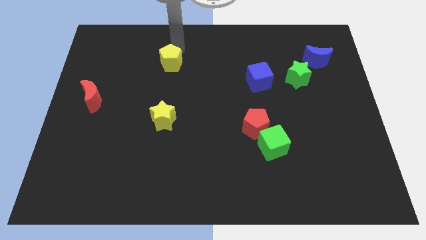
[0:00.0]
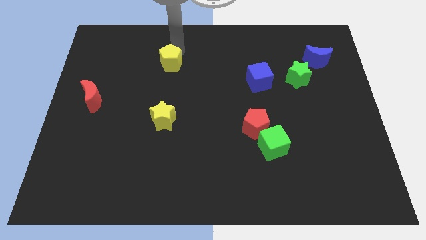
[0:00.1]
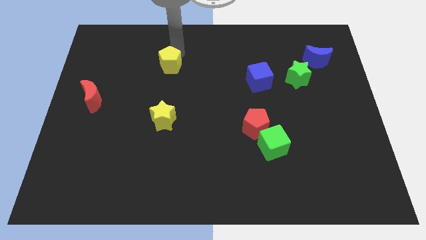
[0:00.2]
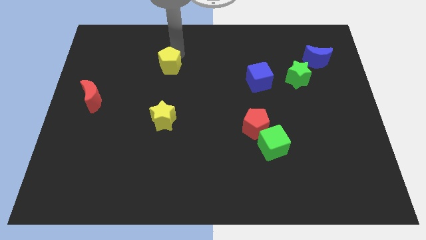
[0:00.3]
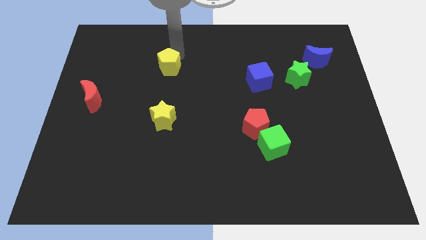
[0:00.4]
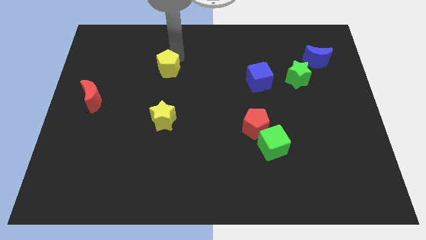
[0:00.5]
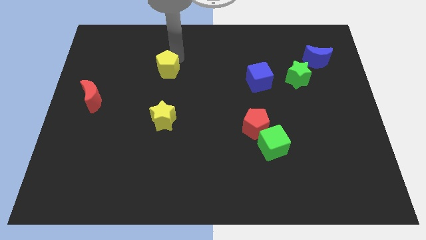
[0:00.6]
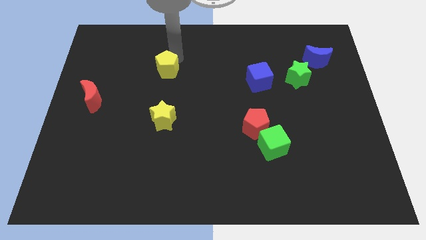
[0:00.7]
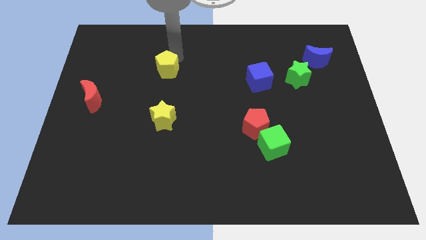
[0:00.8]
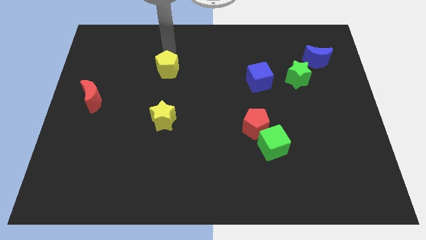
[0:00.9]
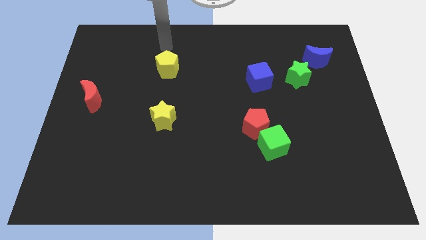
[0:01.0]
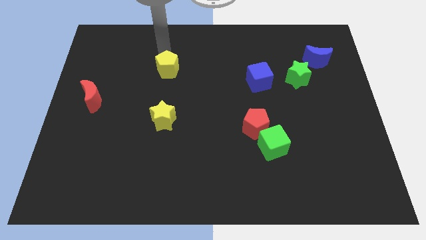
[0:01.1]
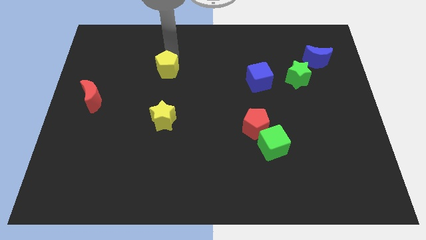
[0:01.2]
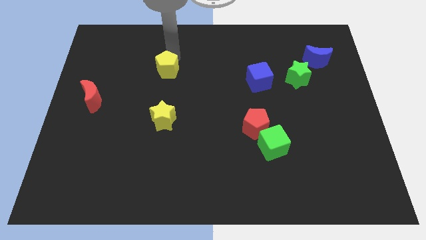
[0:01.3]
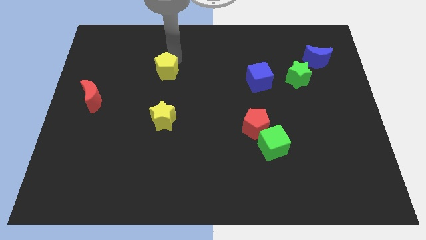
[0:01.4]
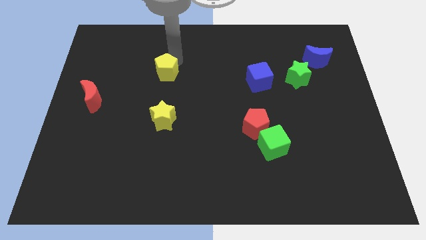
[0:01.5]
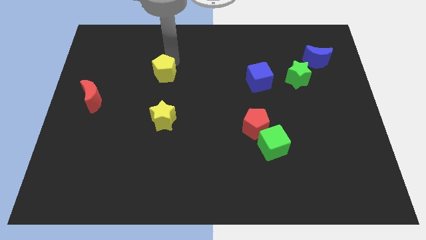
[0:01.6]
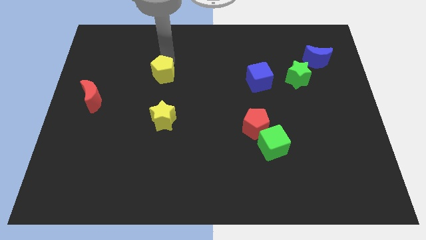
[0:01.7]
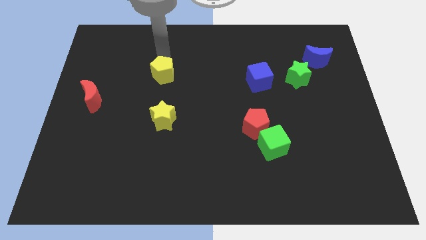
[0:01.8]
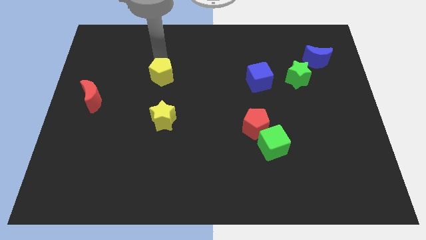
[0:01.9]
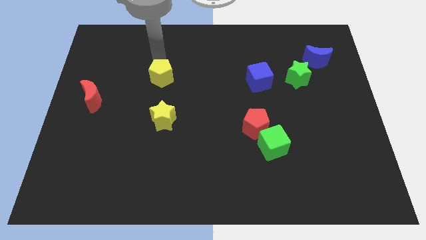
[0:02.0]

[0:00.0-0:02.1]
place the yellow pentagon above the yellow star

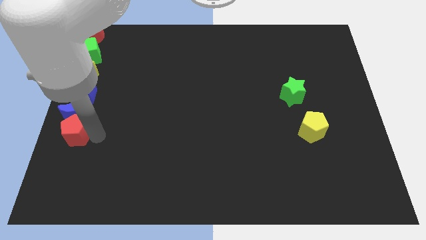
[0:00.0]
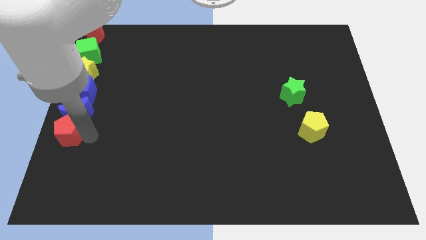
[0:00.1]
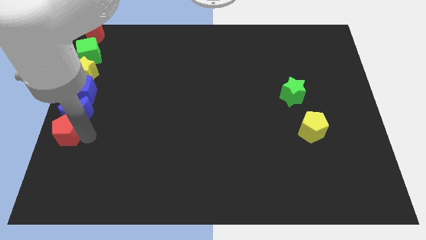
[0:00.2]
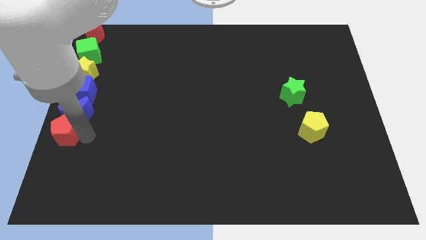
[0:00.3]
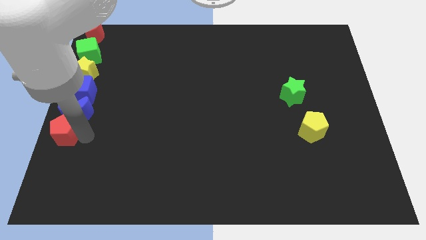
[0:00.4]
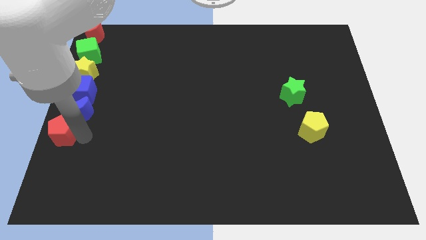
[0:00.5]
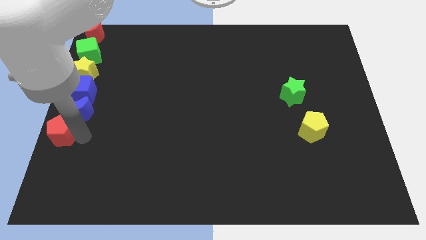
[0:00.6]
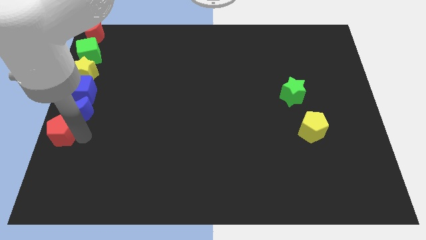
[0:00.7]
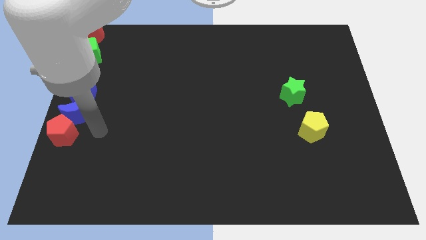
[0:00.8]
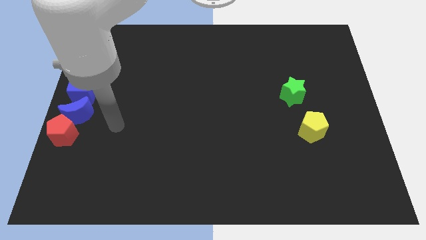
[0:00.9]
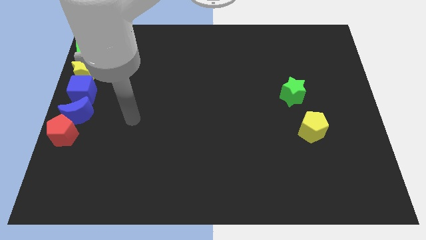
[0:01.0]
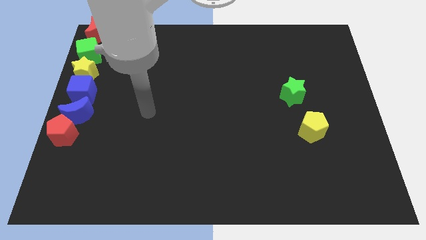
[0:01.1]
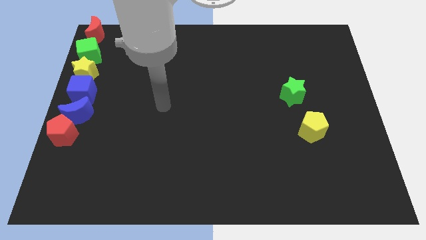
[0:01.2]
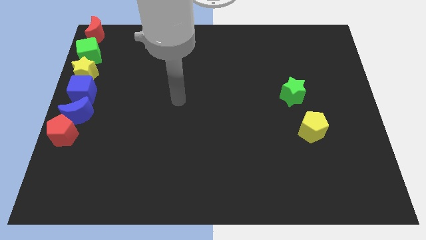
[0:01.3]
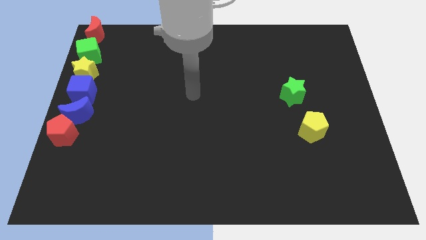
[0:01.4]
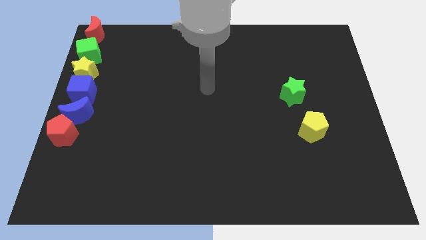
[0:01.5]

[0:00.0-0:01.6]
place the red pentagon below the blue moon

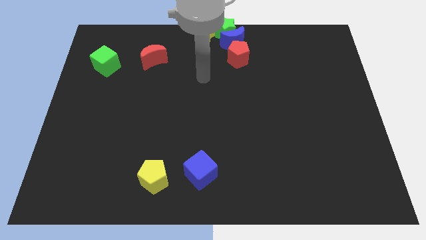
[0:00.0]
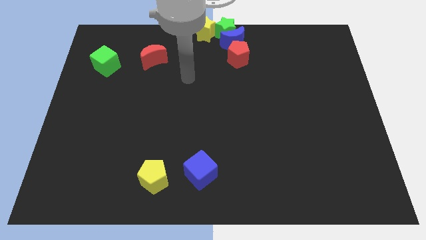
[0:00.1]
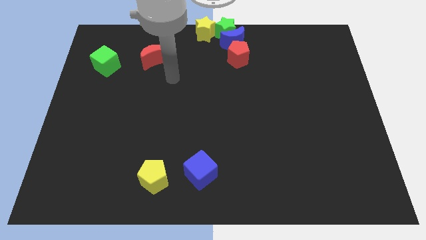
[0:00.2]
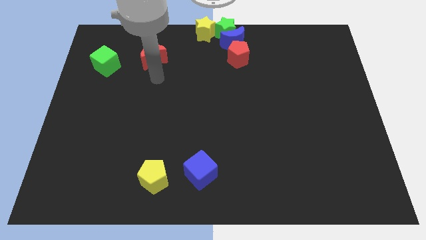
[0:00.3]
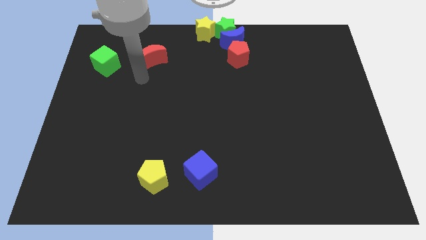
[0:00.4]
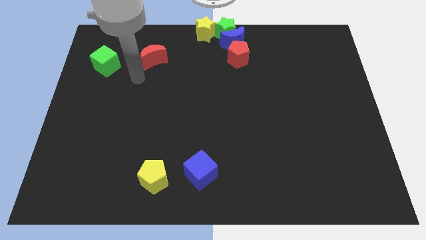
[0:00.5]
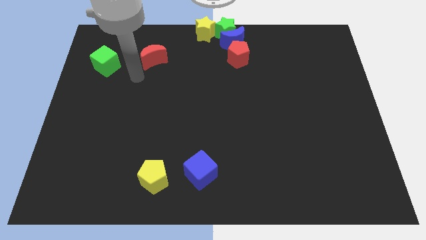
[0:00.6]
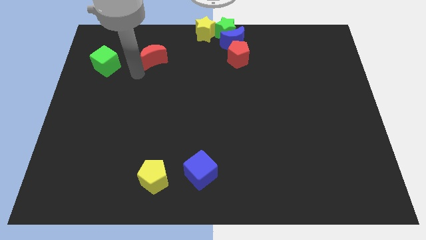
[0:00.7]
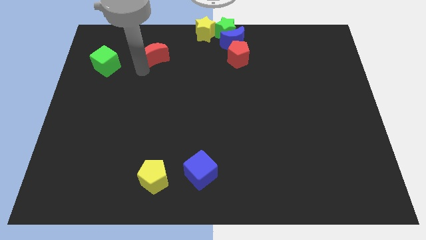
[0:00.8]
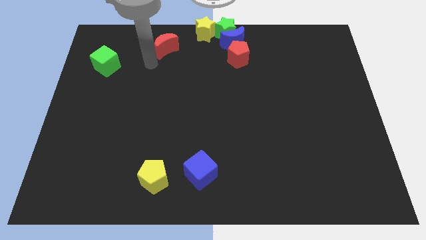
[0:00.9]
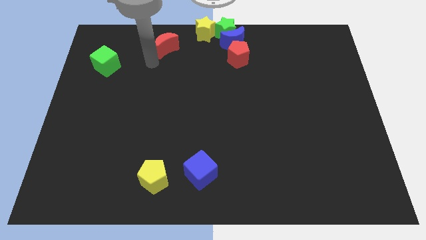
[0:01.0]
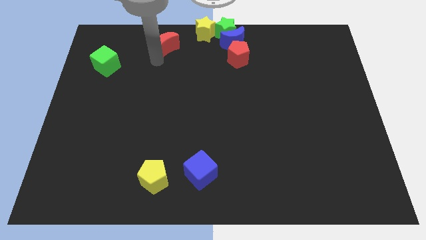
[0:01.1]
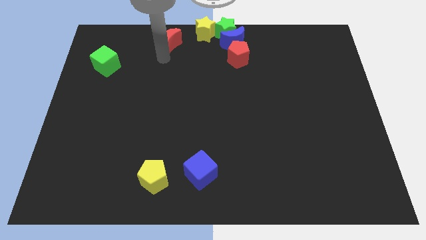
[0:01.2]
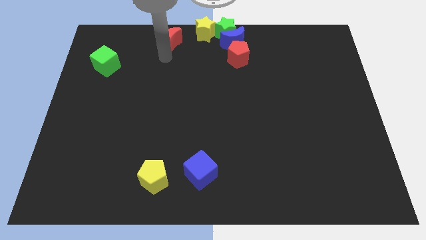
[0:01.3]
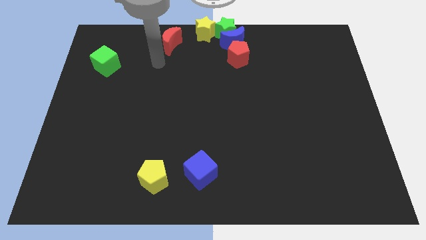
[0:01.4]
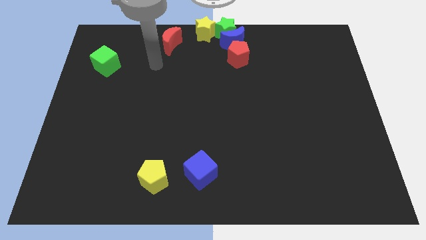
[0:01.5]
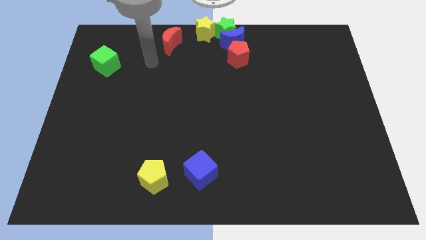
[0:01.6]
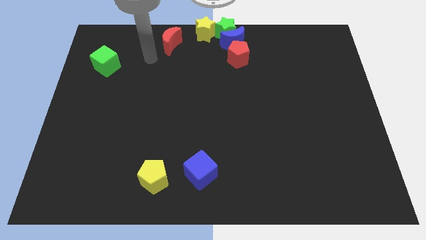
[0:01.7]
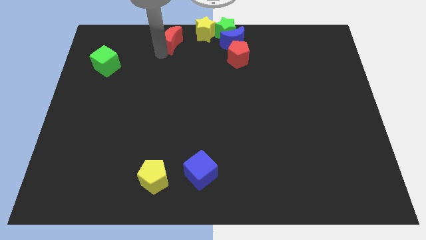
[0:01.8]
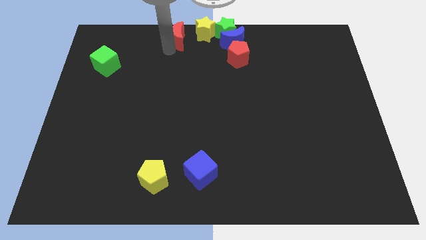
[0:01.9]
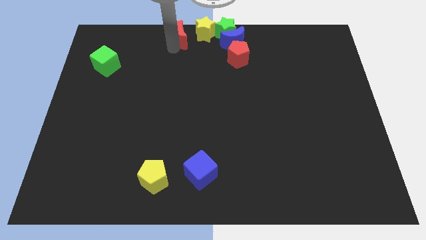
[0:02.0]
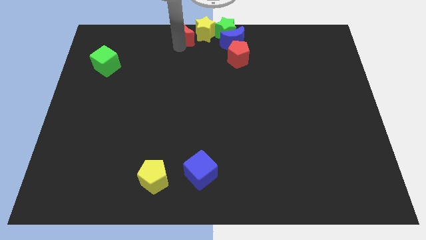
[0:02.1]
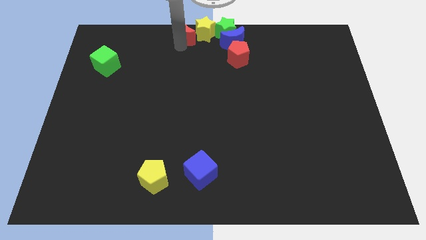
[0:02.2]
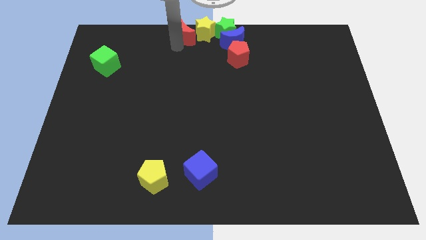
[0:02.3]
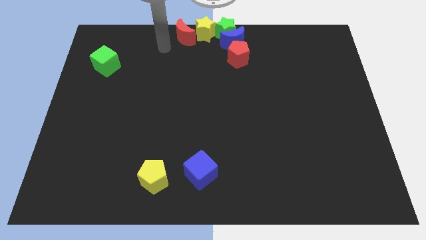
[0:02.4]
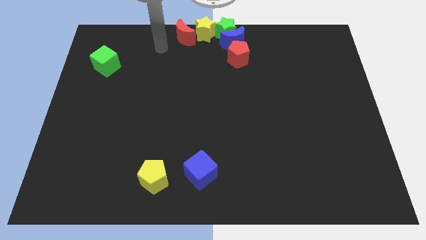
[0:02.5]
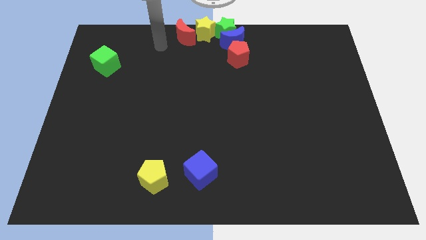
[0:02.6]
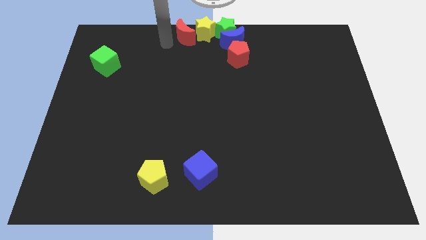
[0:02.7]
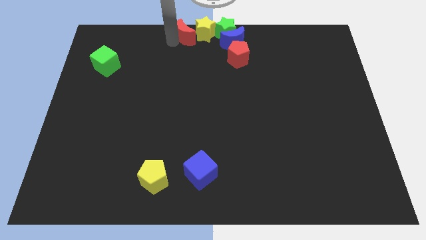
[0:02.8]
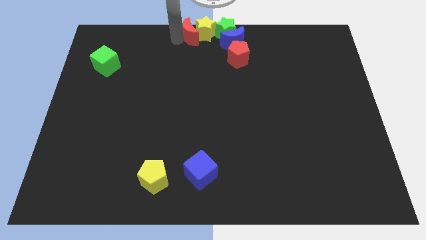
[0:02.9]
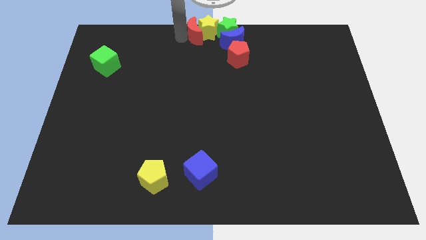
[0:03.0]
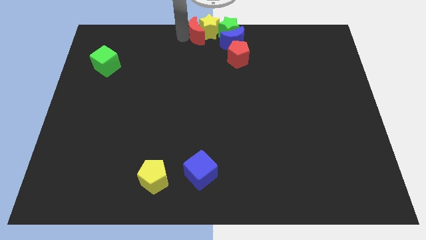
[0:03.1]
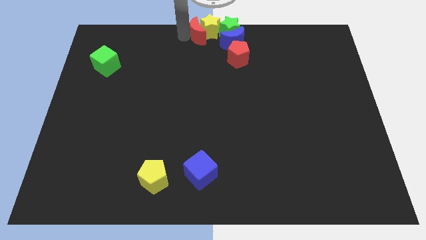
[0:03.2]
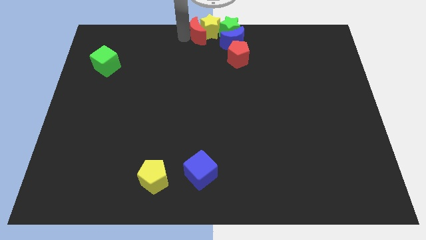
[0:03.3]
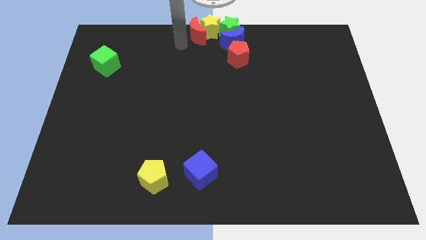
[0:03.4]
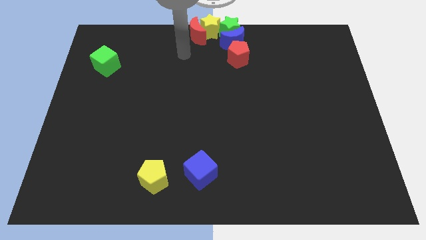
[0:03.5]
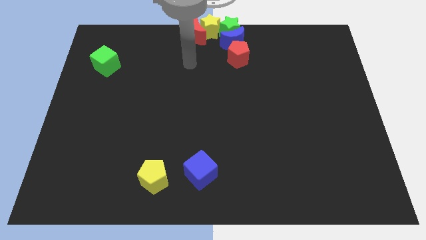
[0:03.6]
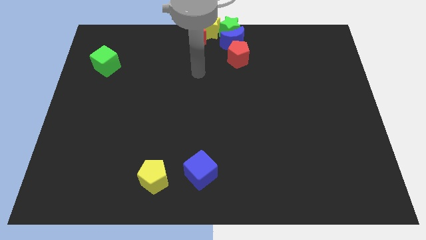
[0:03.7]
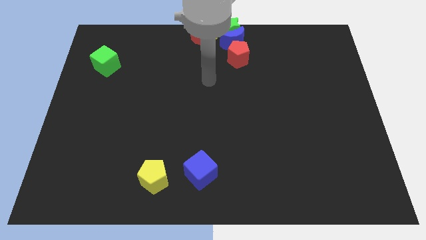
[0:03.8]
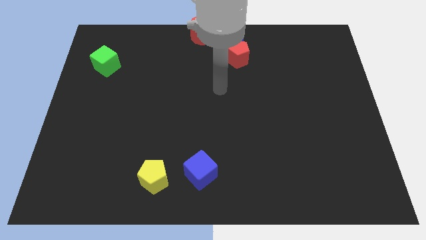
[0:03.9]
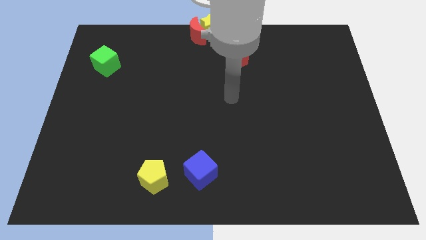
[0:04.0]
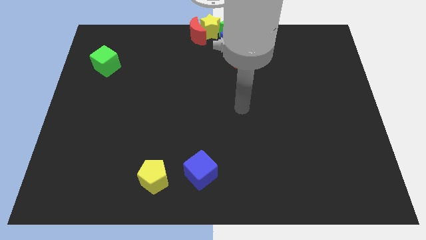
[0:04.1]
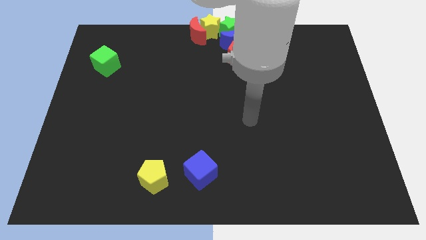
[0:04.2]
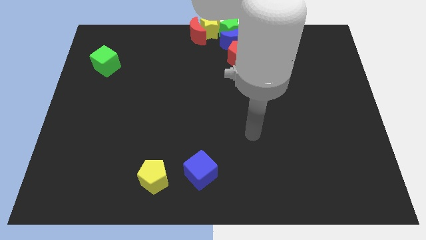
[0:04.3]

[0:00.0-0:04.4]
place red crescent to the top center of the board

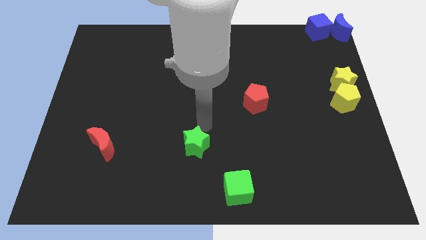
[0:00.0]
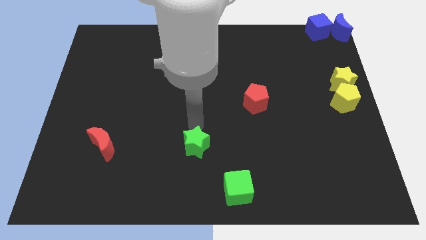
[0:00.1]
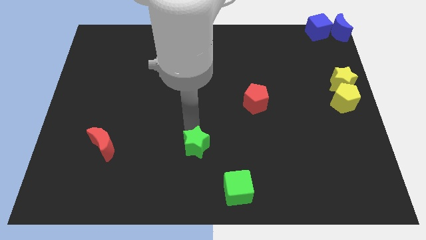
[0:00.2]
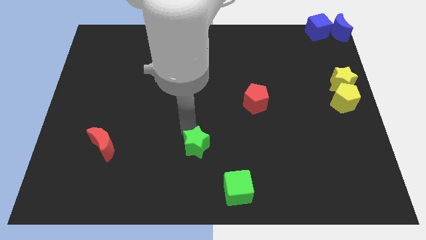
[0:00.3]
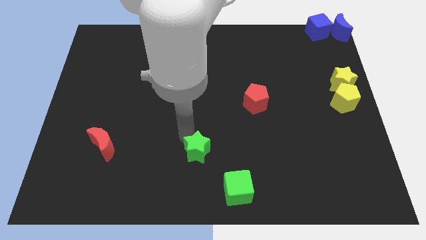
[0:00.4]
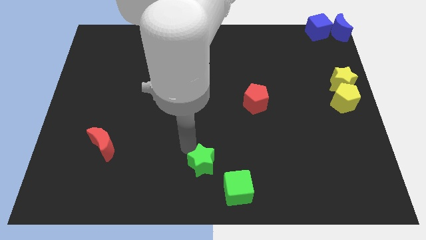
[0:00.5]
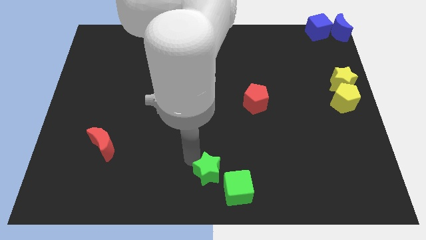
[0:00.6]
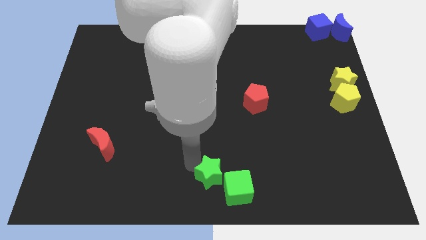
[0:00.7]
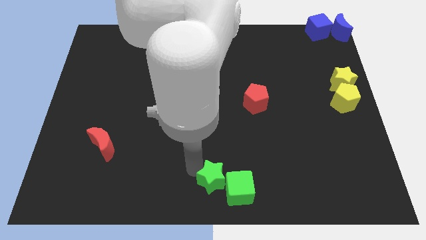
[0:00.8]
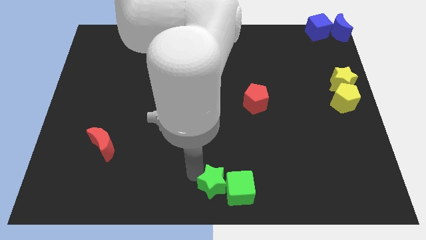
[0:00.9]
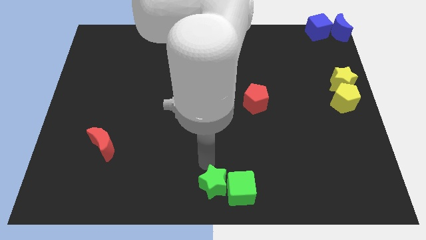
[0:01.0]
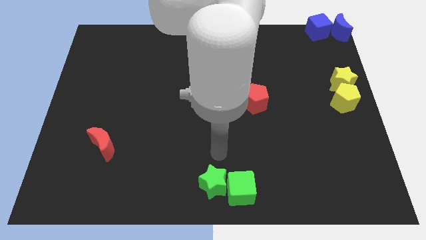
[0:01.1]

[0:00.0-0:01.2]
place green star beside green cube
